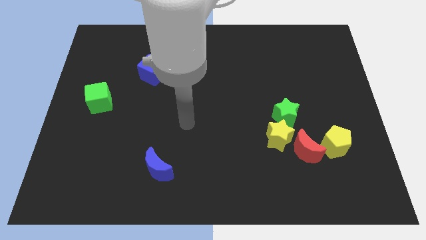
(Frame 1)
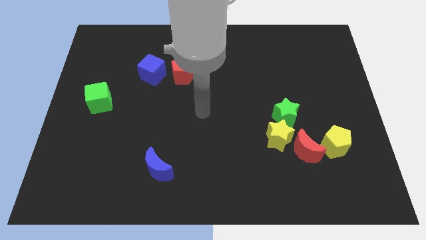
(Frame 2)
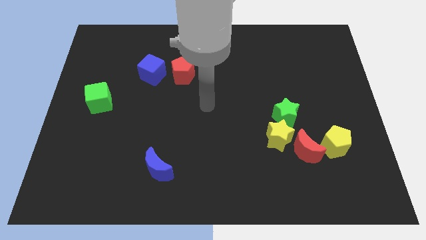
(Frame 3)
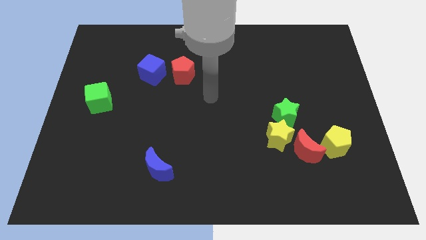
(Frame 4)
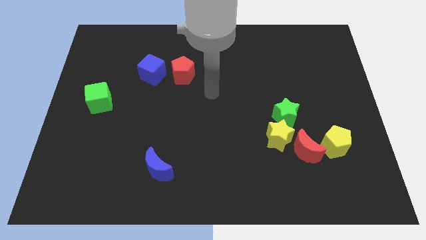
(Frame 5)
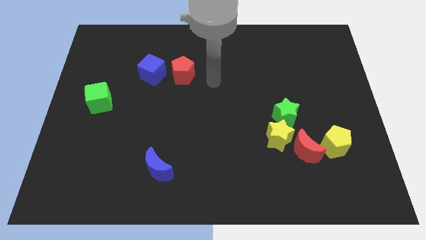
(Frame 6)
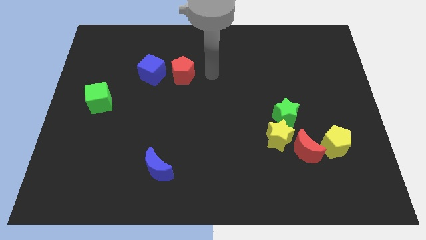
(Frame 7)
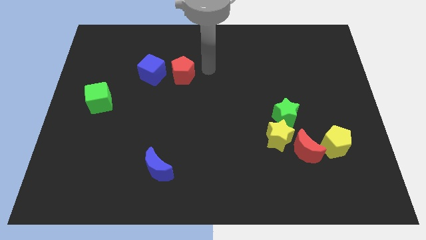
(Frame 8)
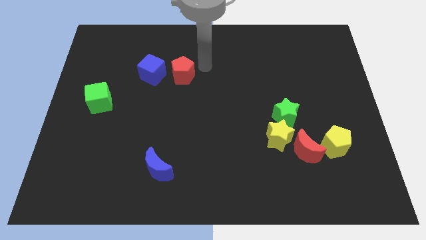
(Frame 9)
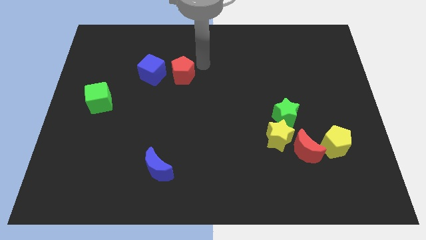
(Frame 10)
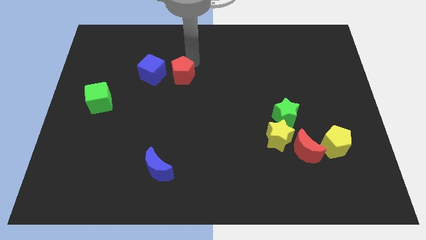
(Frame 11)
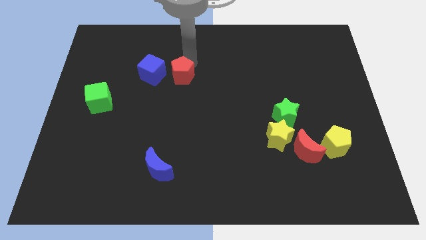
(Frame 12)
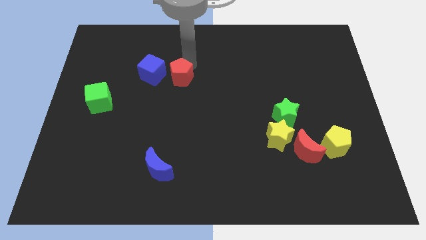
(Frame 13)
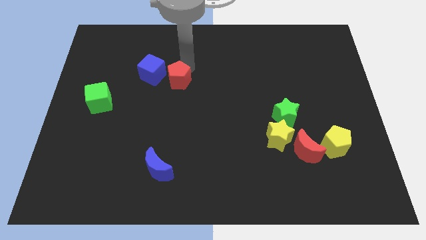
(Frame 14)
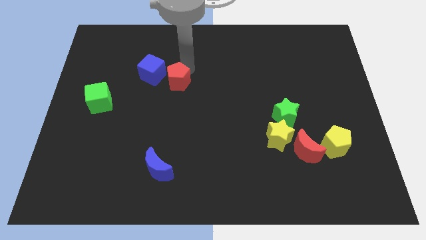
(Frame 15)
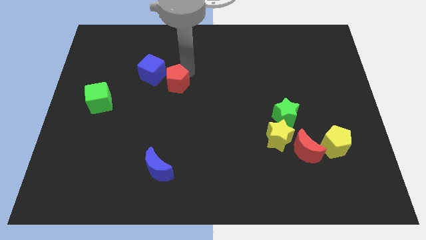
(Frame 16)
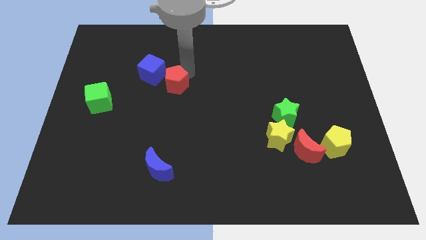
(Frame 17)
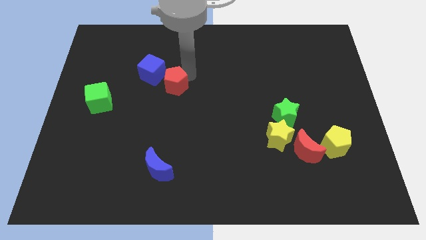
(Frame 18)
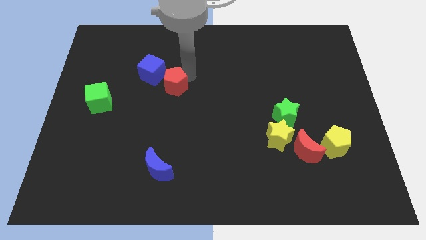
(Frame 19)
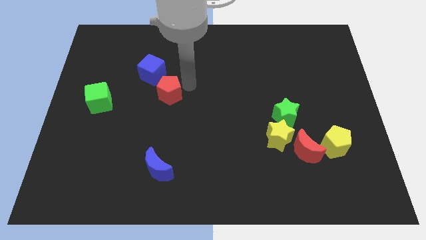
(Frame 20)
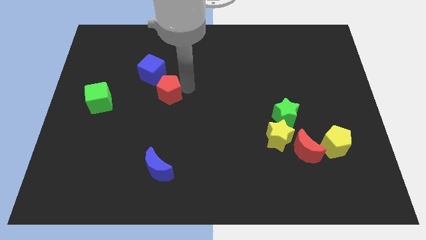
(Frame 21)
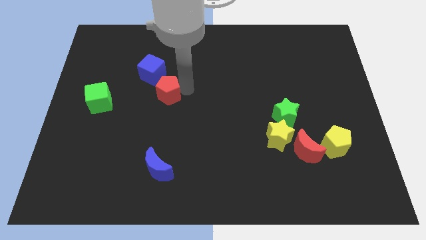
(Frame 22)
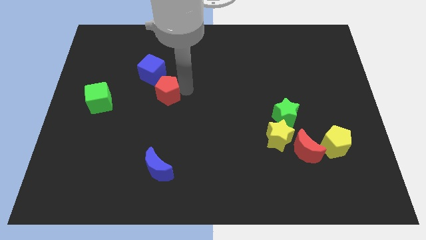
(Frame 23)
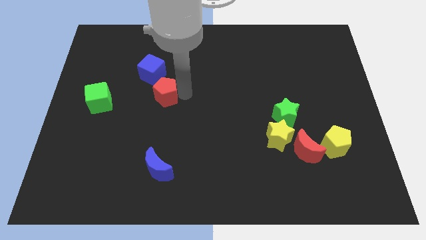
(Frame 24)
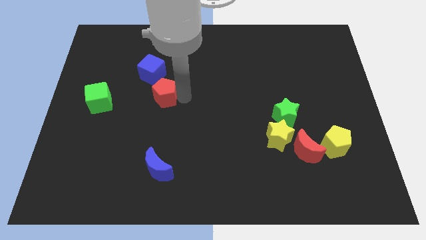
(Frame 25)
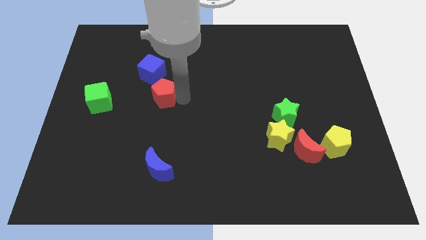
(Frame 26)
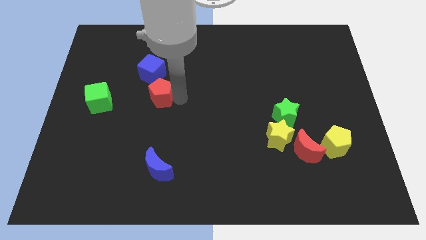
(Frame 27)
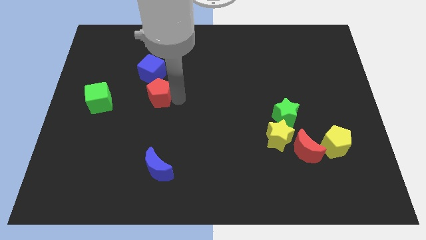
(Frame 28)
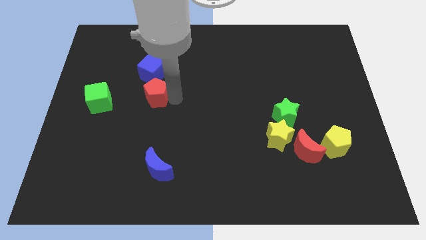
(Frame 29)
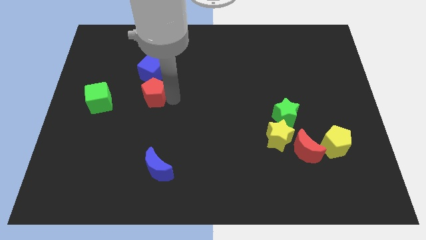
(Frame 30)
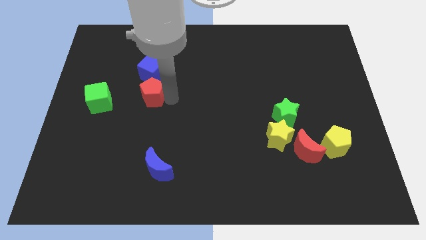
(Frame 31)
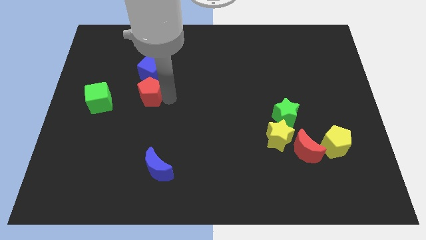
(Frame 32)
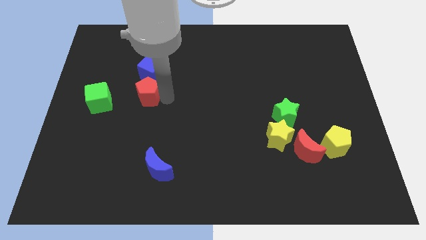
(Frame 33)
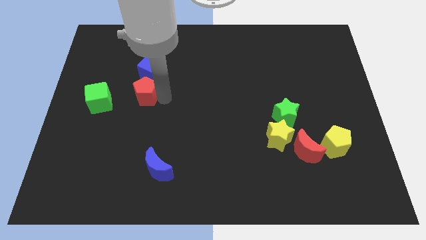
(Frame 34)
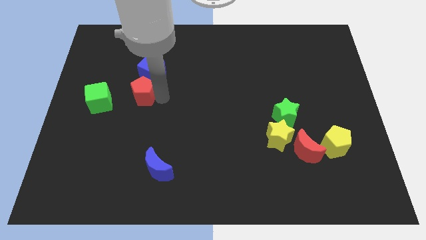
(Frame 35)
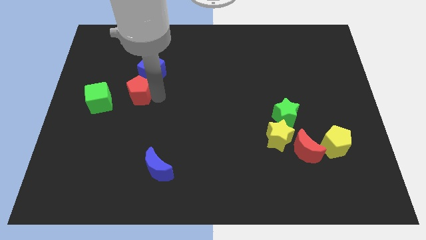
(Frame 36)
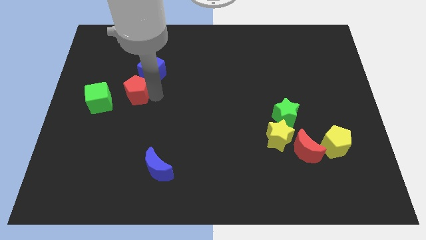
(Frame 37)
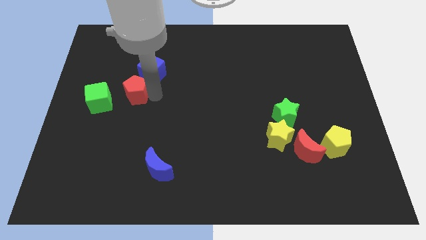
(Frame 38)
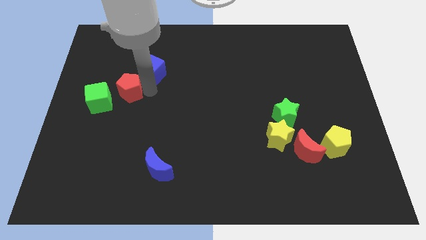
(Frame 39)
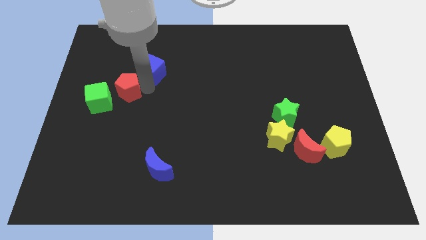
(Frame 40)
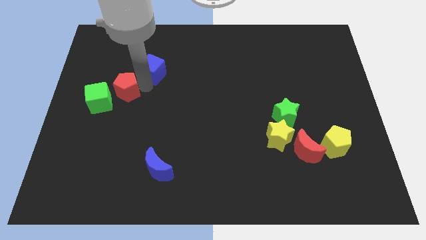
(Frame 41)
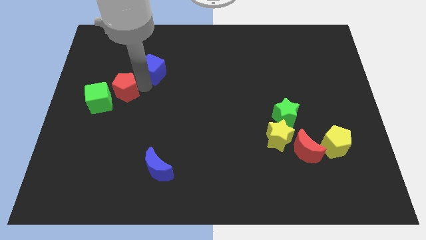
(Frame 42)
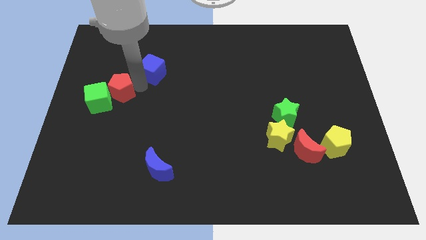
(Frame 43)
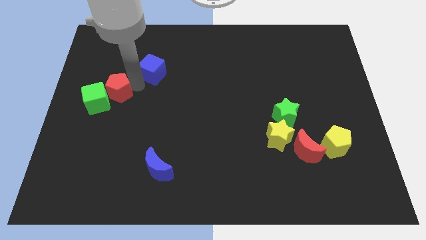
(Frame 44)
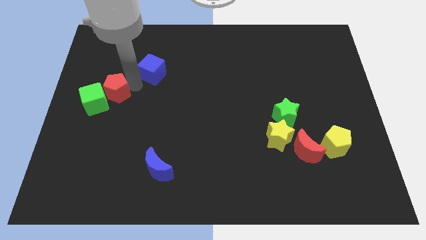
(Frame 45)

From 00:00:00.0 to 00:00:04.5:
push the red pentagon next to the green cube

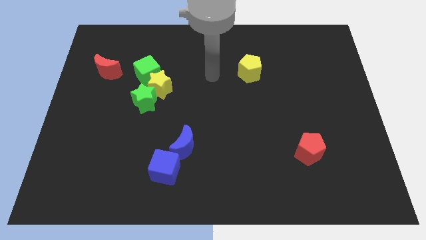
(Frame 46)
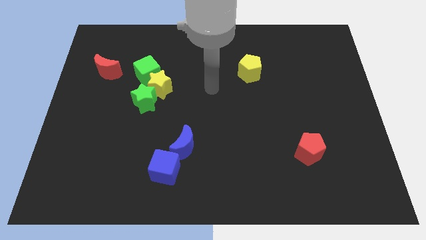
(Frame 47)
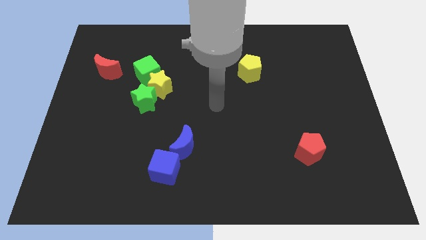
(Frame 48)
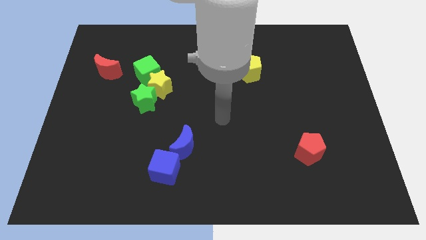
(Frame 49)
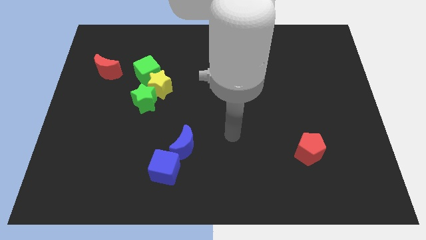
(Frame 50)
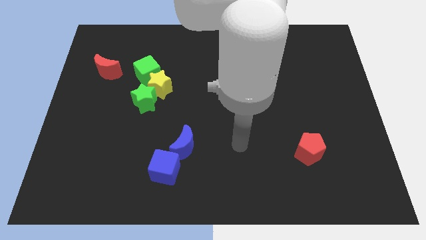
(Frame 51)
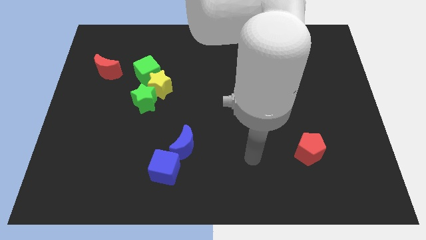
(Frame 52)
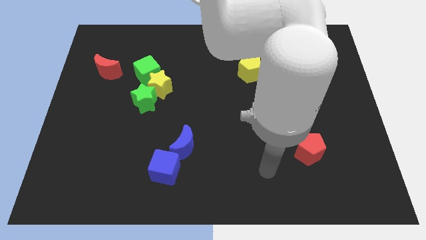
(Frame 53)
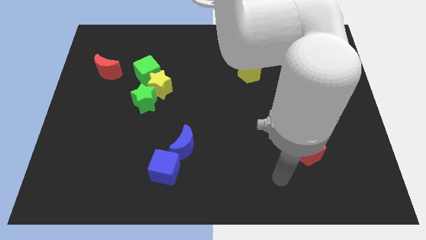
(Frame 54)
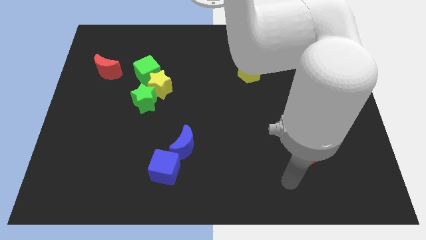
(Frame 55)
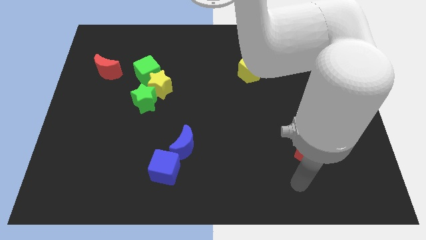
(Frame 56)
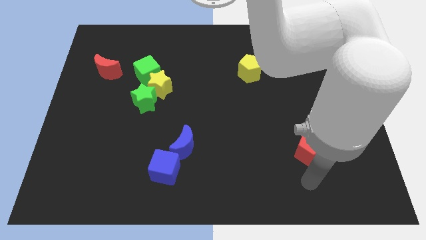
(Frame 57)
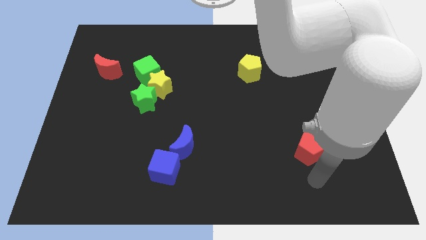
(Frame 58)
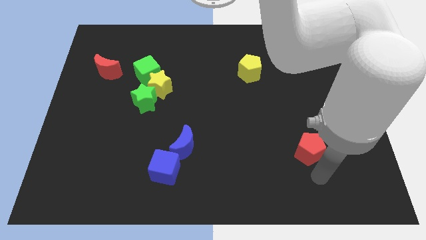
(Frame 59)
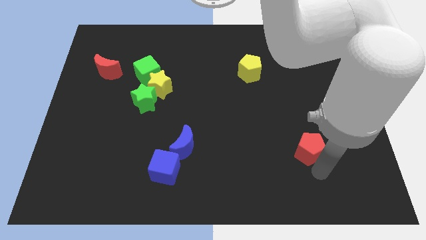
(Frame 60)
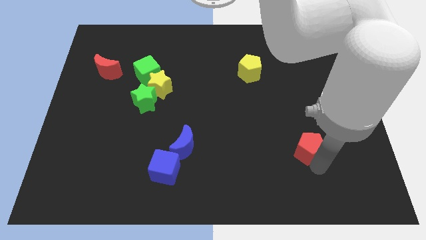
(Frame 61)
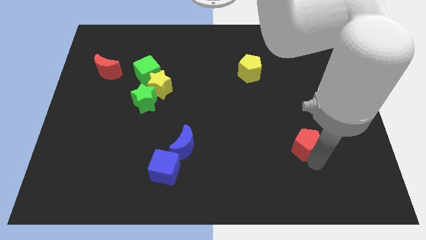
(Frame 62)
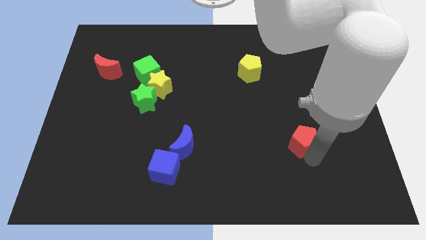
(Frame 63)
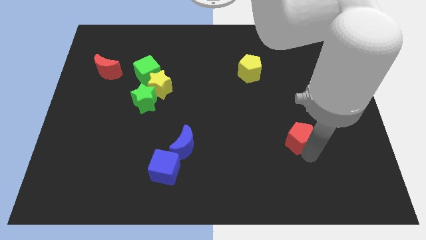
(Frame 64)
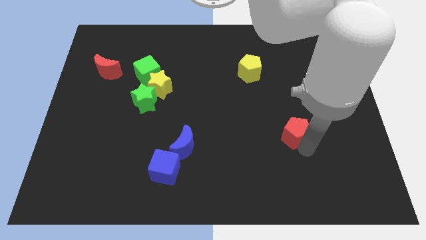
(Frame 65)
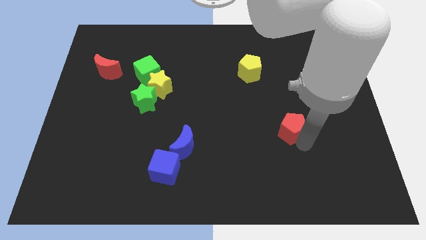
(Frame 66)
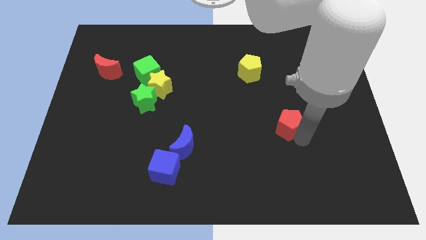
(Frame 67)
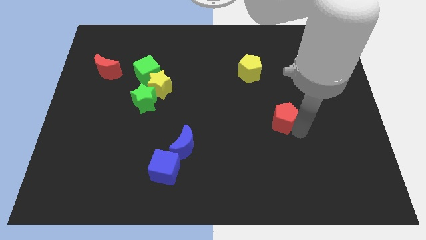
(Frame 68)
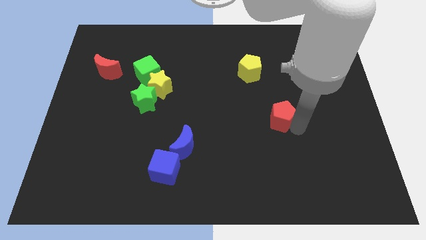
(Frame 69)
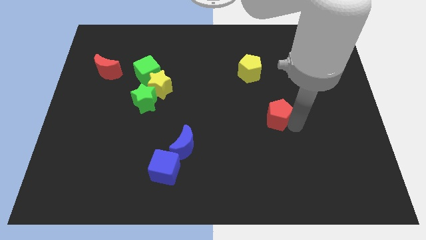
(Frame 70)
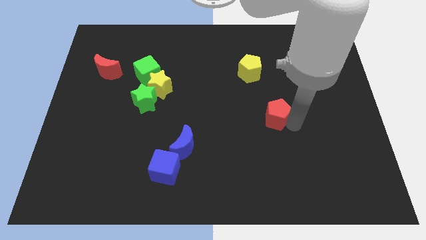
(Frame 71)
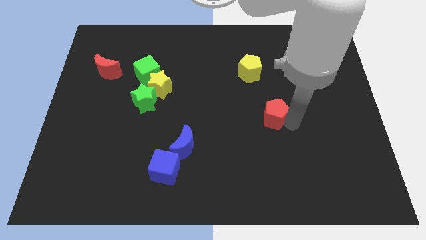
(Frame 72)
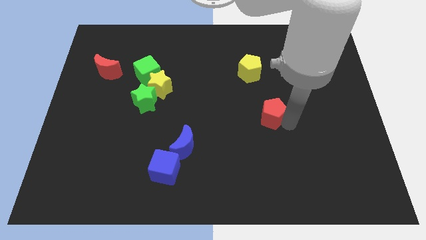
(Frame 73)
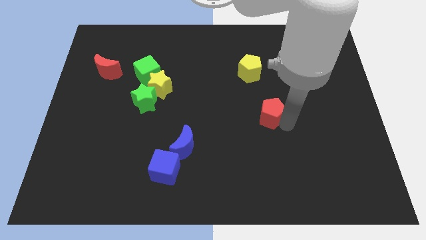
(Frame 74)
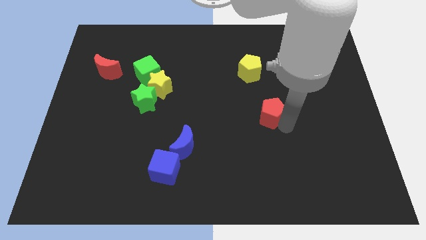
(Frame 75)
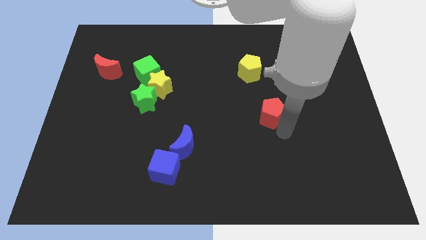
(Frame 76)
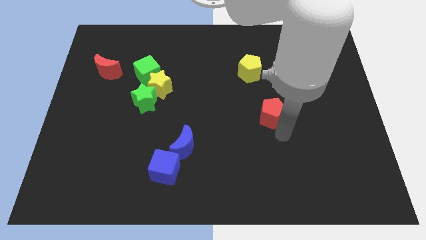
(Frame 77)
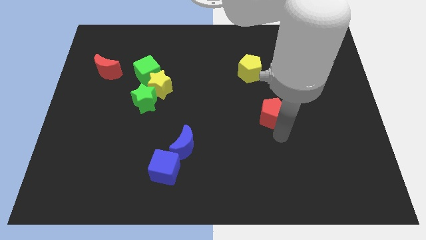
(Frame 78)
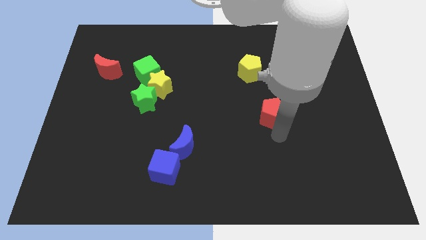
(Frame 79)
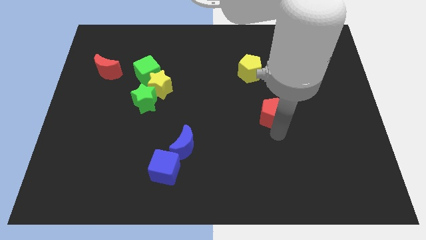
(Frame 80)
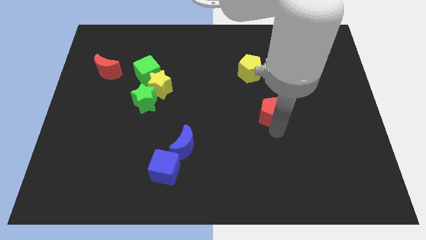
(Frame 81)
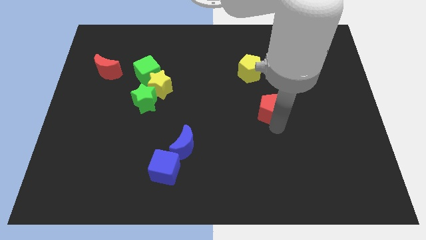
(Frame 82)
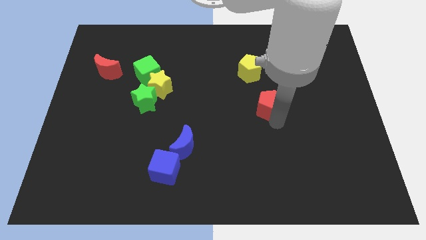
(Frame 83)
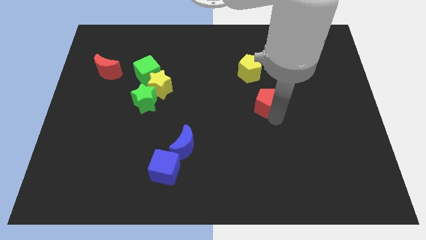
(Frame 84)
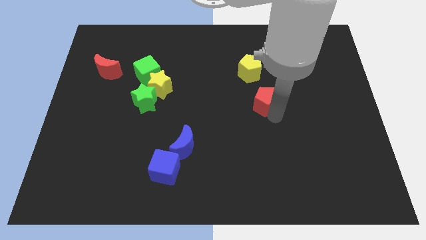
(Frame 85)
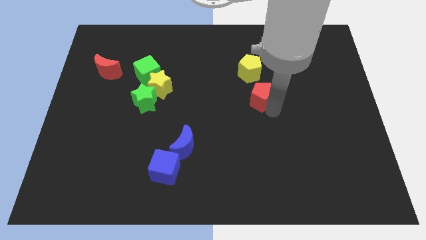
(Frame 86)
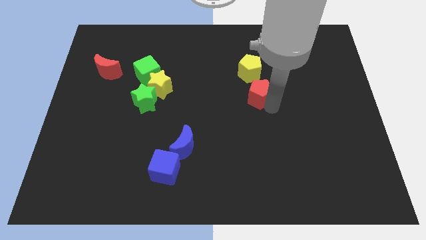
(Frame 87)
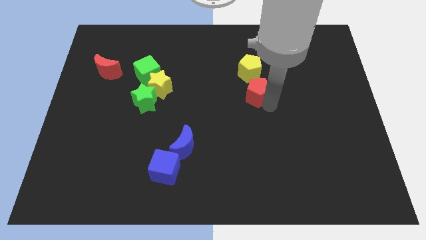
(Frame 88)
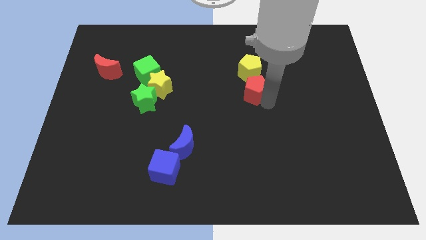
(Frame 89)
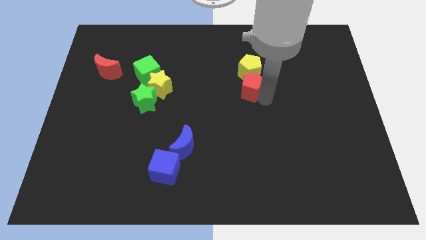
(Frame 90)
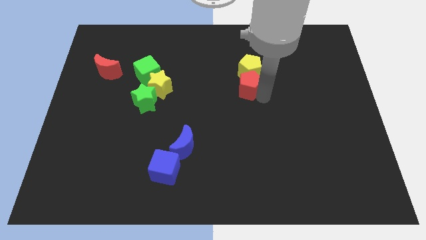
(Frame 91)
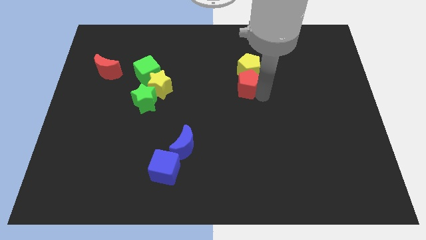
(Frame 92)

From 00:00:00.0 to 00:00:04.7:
put the red pentagon to the yellow pentagon
